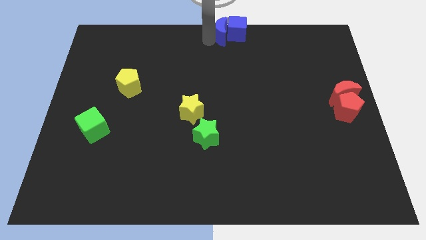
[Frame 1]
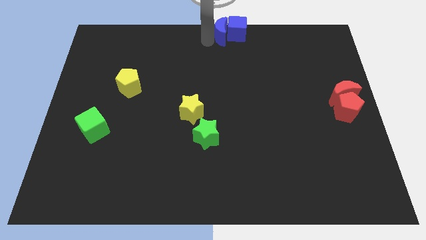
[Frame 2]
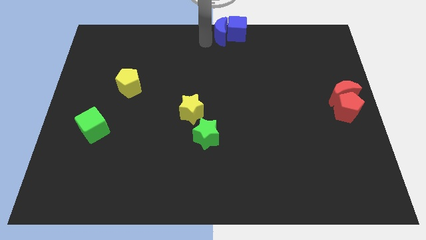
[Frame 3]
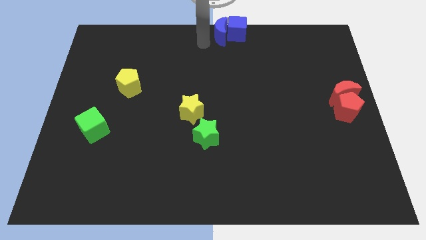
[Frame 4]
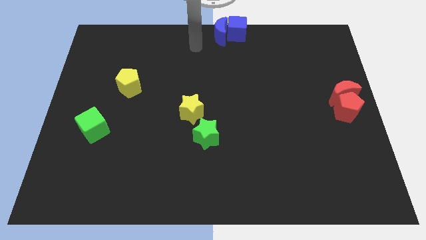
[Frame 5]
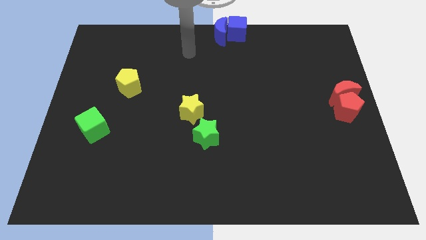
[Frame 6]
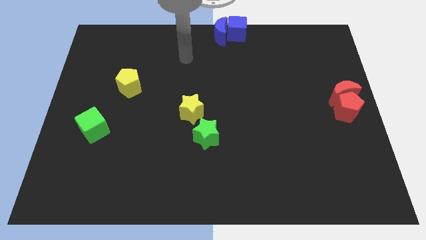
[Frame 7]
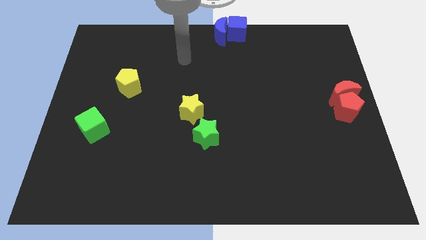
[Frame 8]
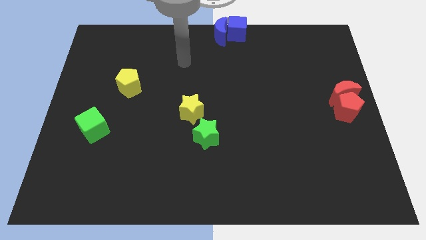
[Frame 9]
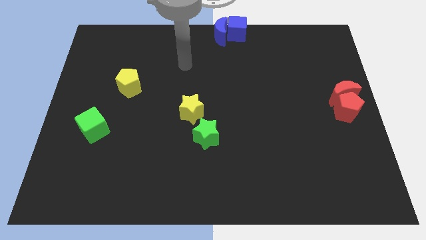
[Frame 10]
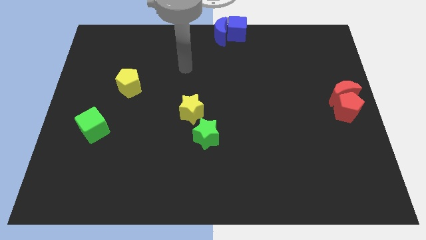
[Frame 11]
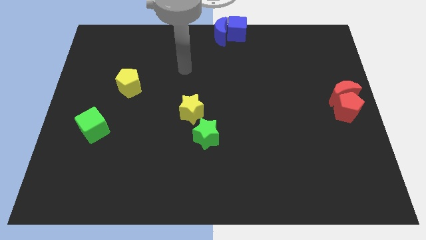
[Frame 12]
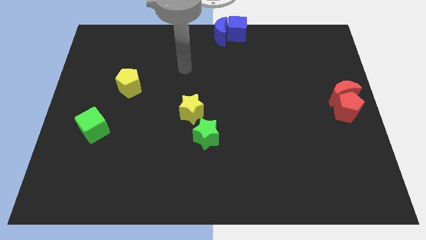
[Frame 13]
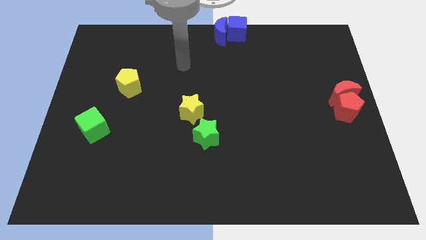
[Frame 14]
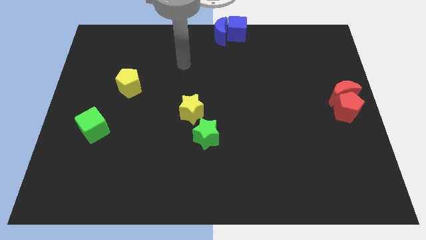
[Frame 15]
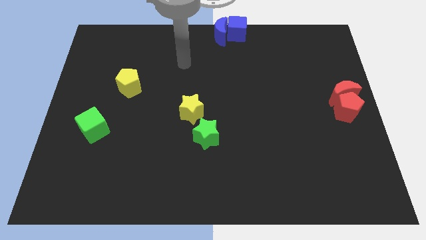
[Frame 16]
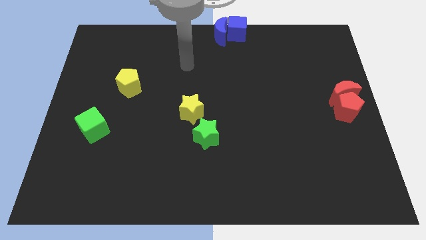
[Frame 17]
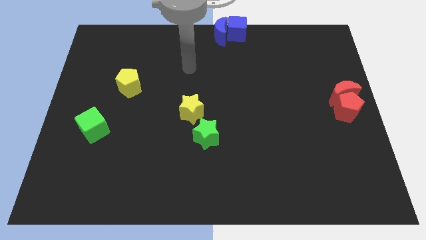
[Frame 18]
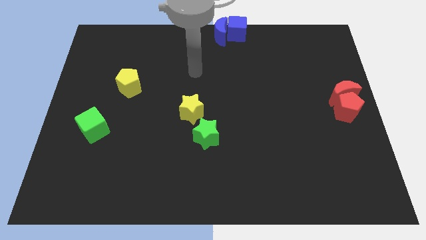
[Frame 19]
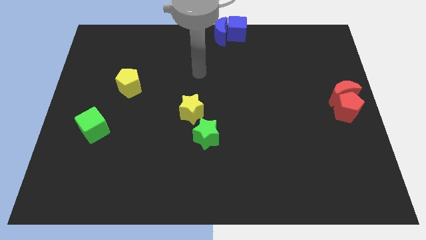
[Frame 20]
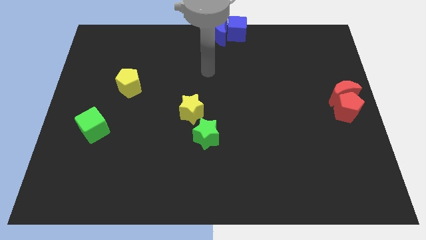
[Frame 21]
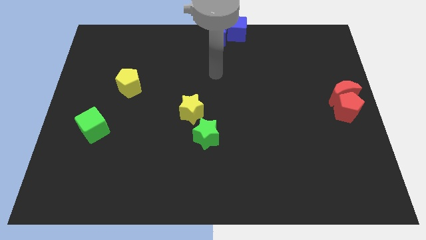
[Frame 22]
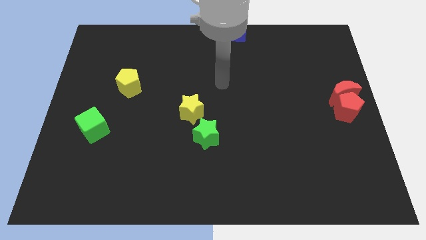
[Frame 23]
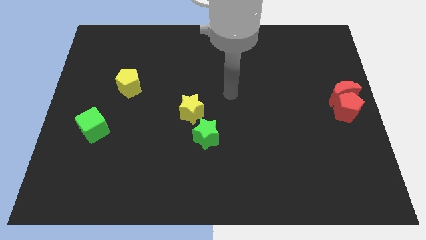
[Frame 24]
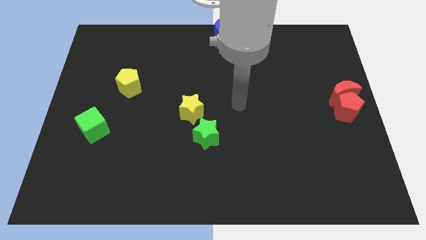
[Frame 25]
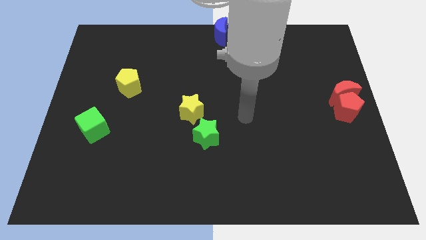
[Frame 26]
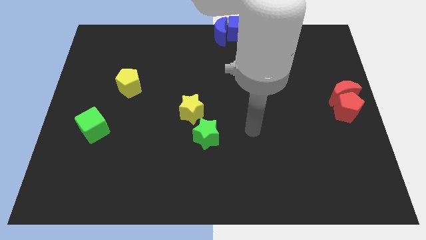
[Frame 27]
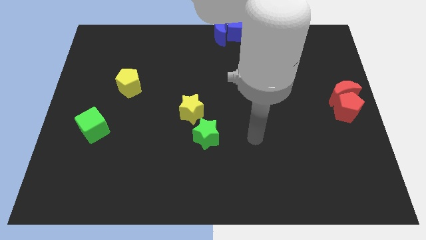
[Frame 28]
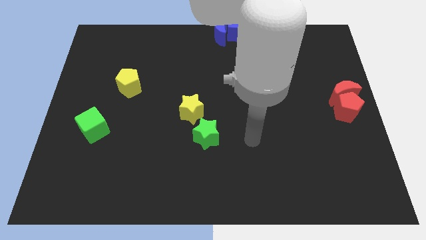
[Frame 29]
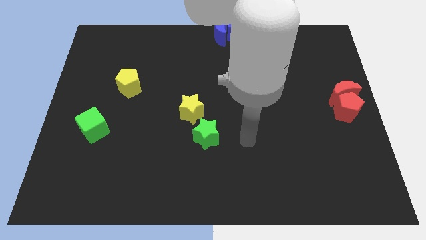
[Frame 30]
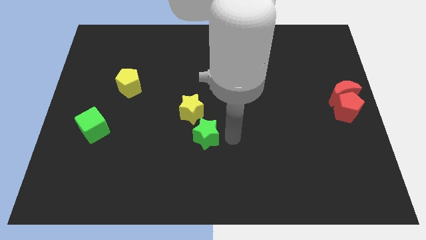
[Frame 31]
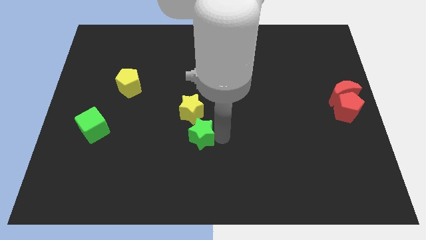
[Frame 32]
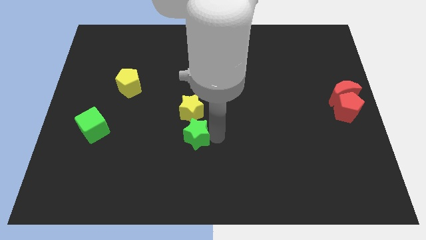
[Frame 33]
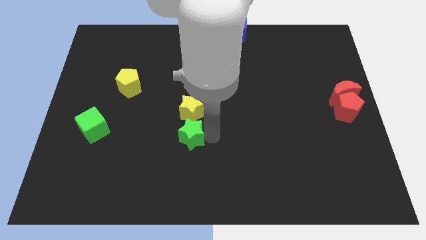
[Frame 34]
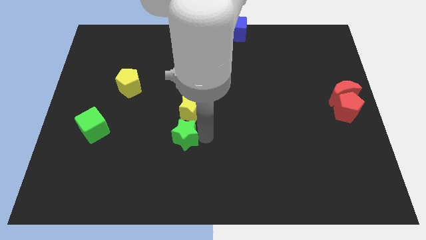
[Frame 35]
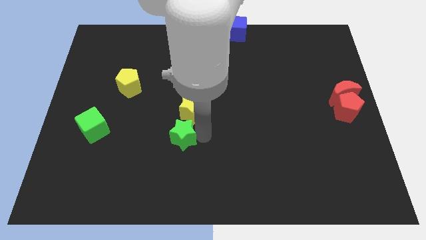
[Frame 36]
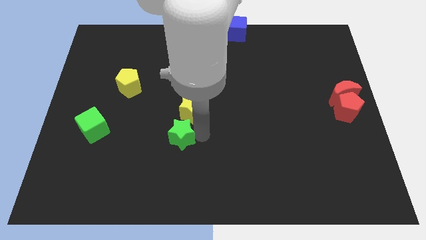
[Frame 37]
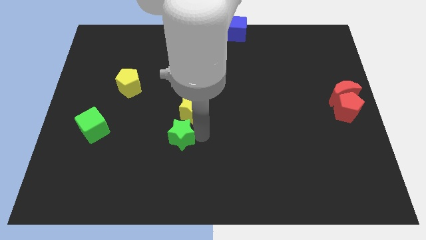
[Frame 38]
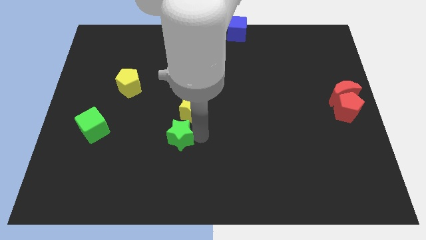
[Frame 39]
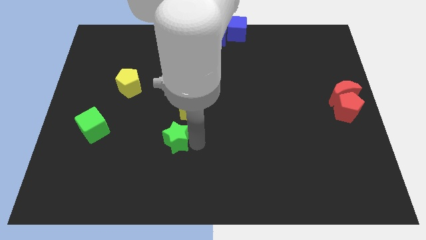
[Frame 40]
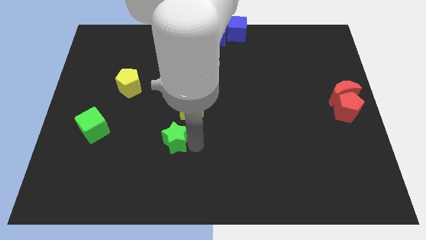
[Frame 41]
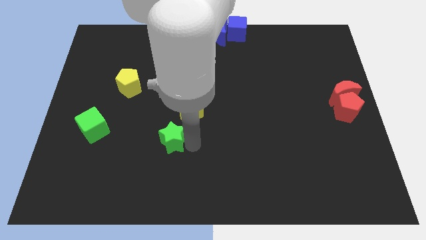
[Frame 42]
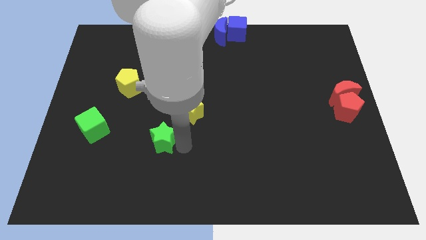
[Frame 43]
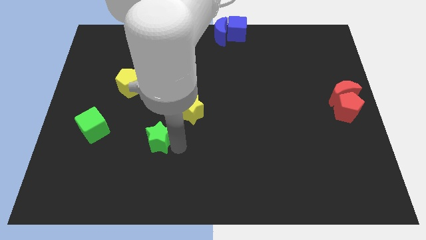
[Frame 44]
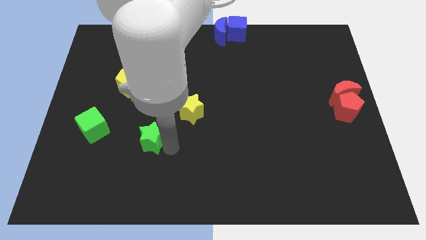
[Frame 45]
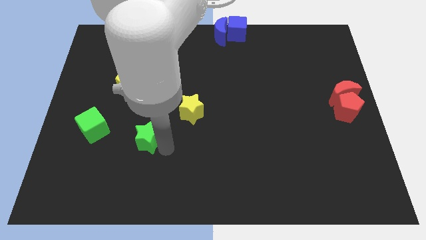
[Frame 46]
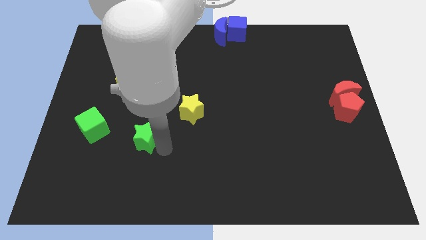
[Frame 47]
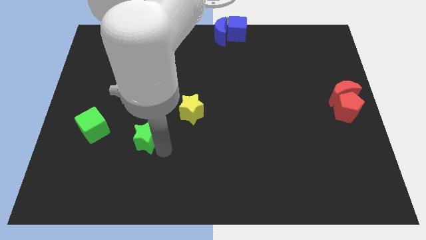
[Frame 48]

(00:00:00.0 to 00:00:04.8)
push the green star towards the green cube

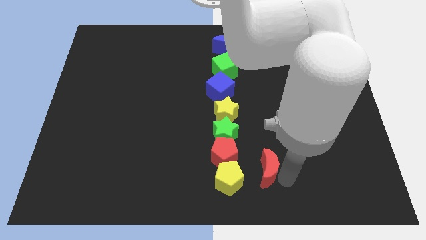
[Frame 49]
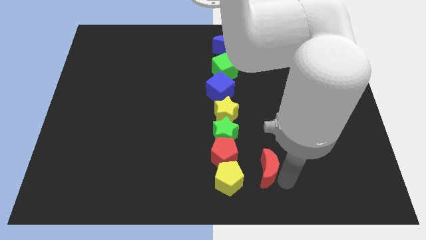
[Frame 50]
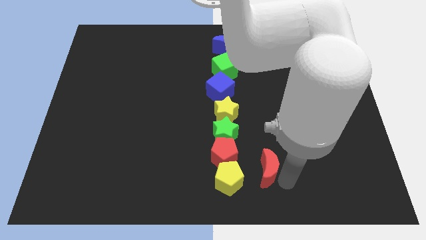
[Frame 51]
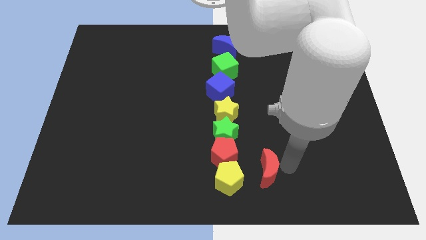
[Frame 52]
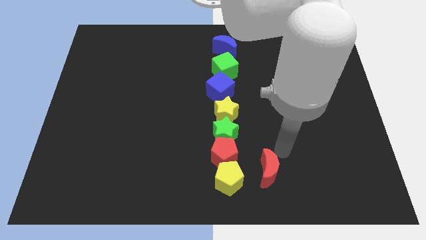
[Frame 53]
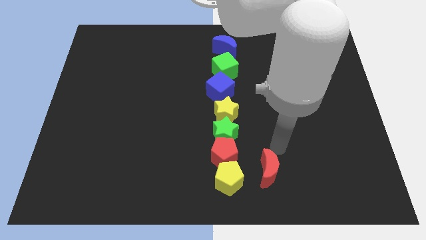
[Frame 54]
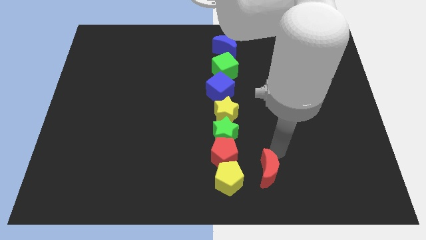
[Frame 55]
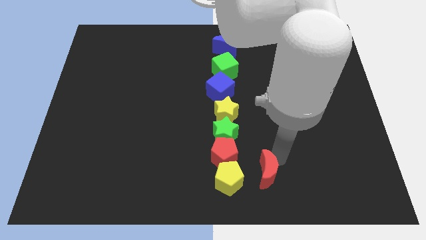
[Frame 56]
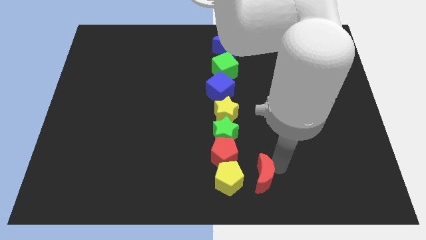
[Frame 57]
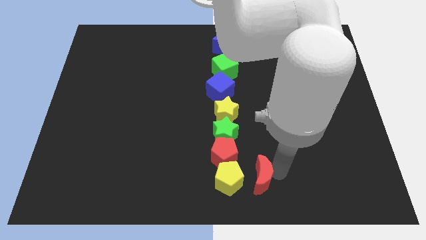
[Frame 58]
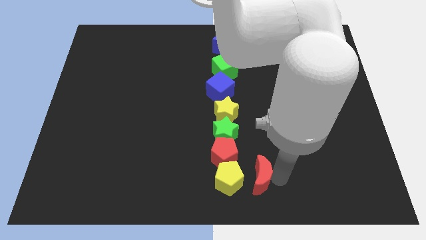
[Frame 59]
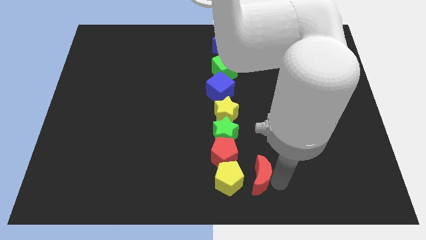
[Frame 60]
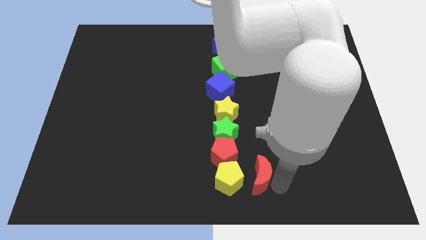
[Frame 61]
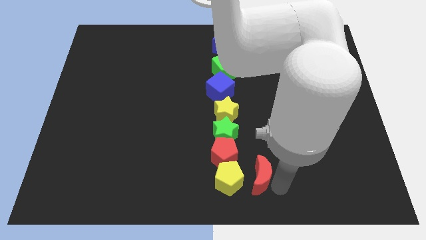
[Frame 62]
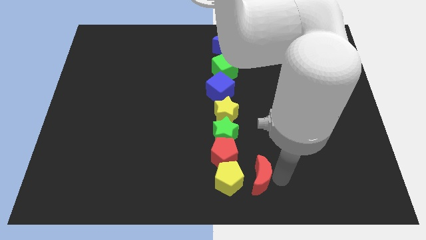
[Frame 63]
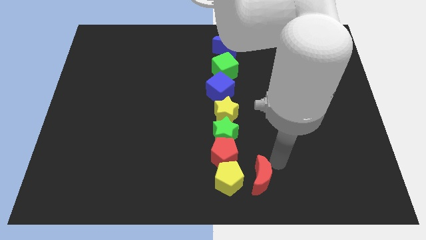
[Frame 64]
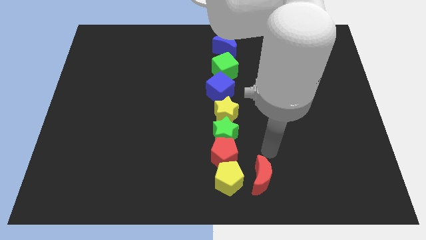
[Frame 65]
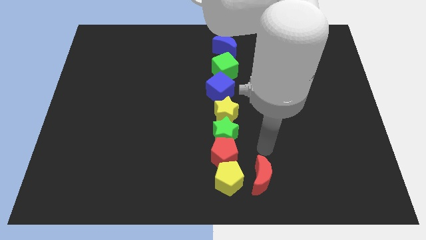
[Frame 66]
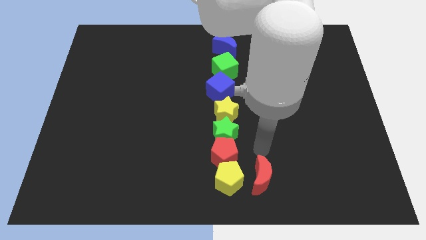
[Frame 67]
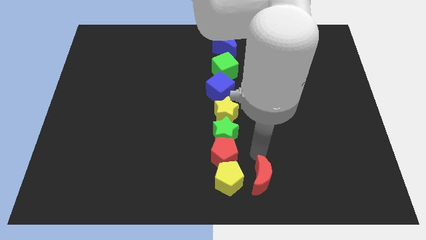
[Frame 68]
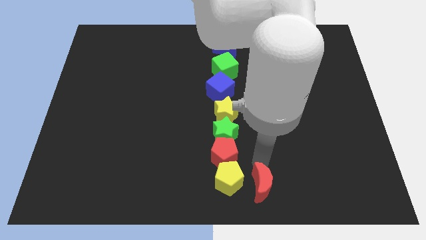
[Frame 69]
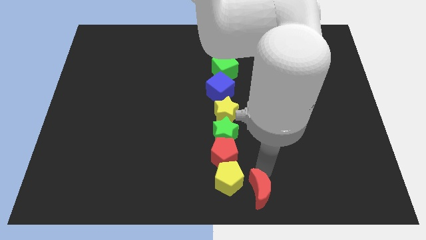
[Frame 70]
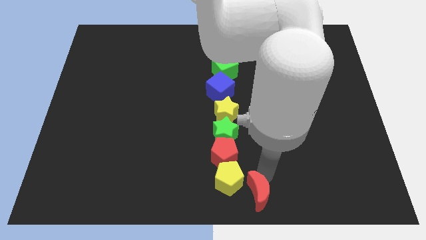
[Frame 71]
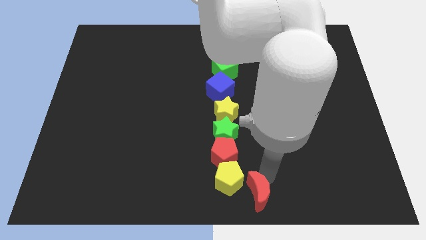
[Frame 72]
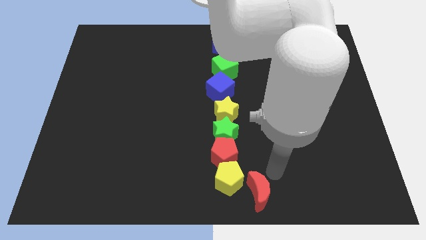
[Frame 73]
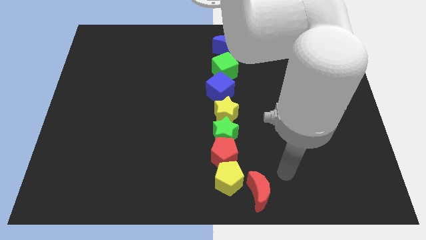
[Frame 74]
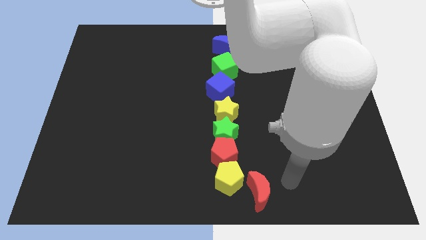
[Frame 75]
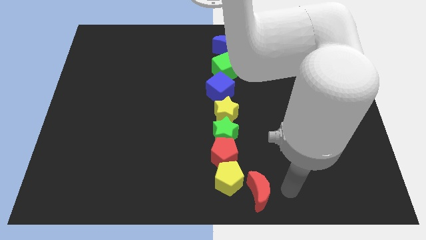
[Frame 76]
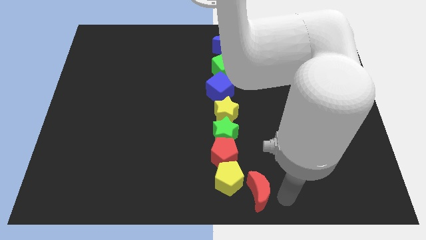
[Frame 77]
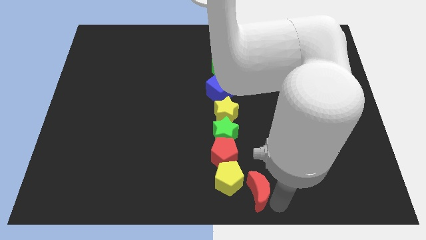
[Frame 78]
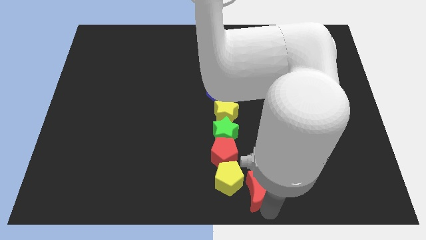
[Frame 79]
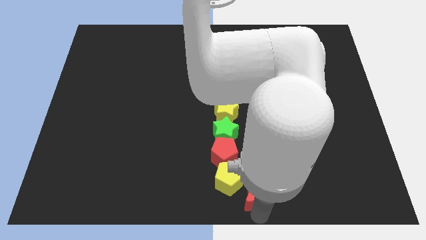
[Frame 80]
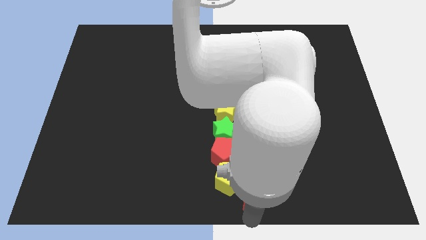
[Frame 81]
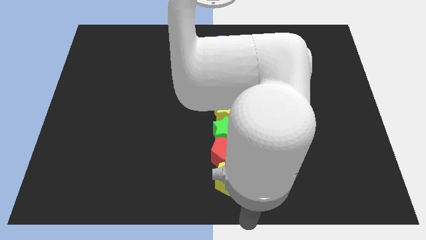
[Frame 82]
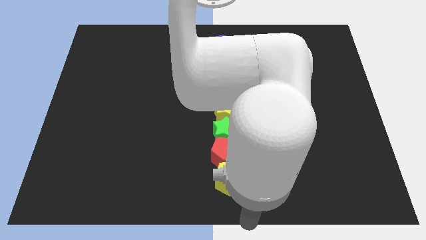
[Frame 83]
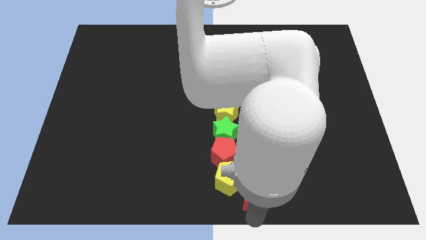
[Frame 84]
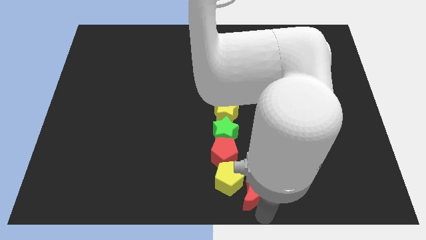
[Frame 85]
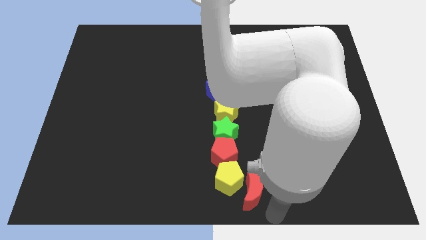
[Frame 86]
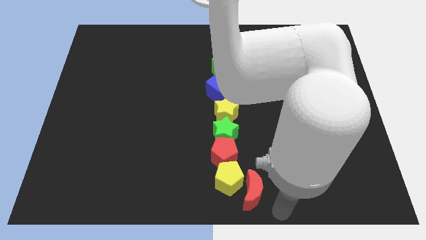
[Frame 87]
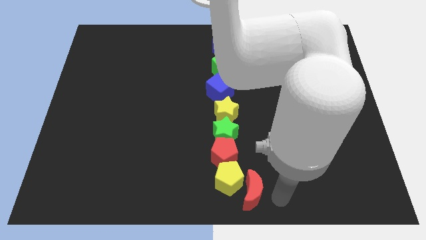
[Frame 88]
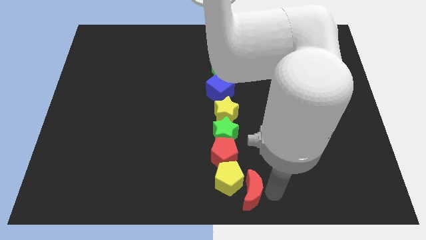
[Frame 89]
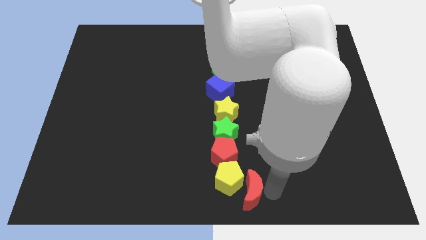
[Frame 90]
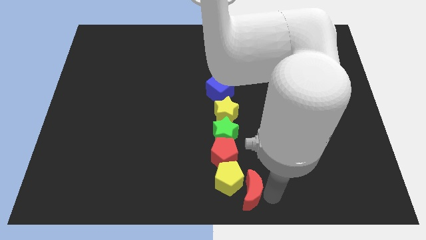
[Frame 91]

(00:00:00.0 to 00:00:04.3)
move red moon close to the yellow pentagon
